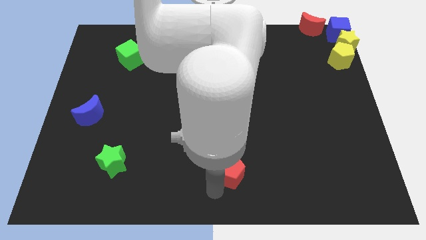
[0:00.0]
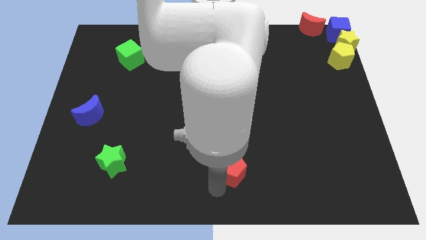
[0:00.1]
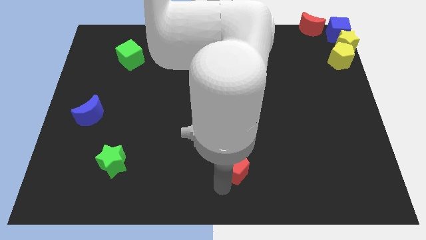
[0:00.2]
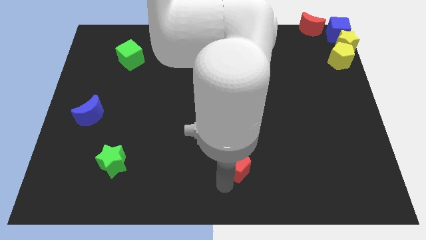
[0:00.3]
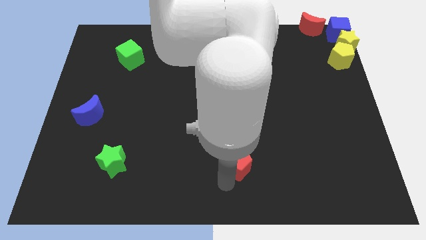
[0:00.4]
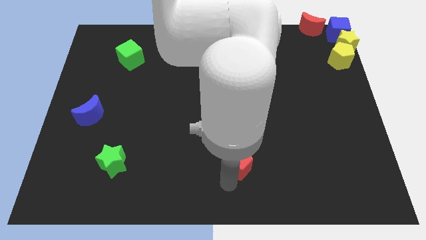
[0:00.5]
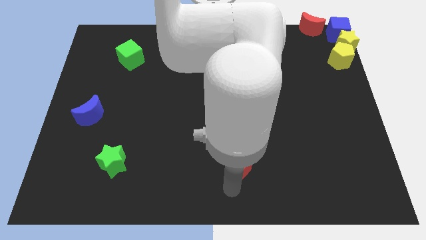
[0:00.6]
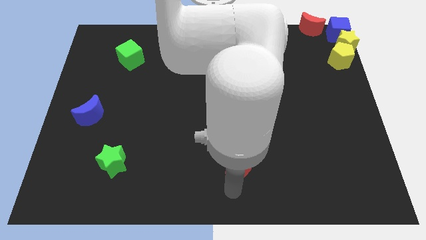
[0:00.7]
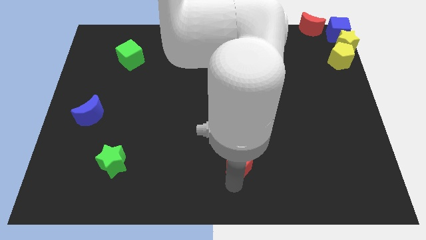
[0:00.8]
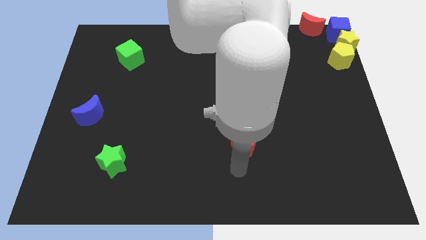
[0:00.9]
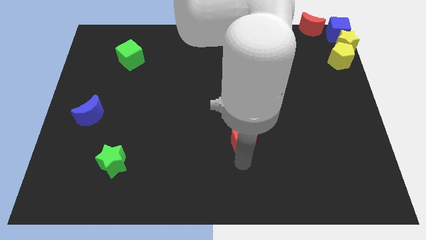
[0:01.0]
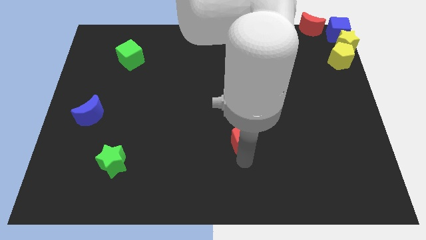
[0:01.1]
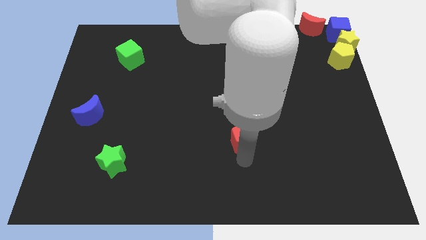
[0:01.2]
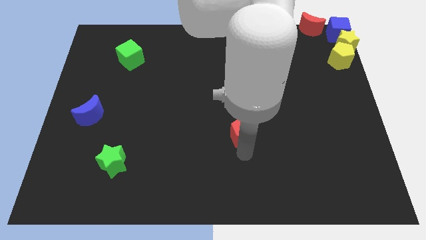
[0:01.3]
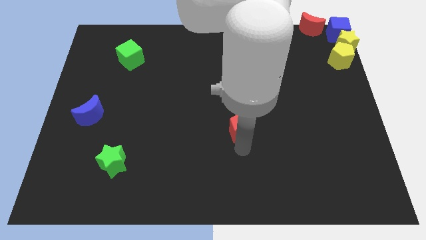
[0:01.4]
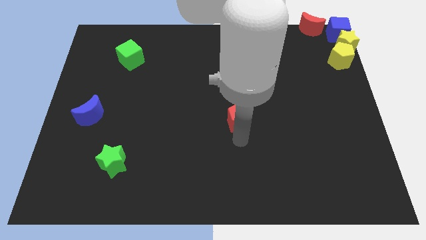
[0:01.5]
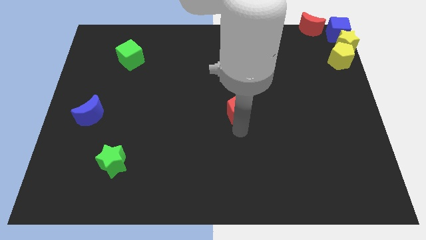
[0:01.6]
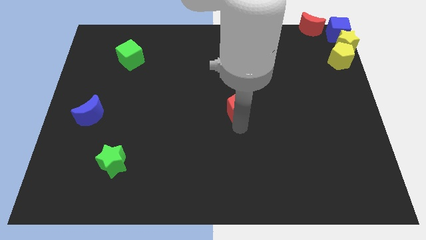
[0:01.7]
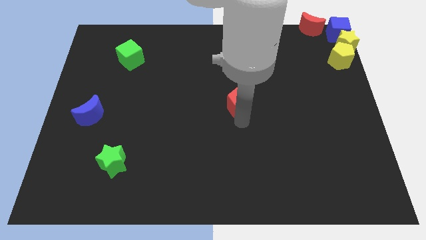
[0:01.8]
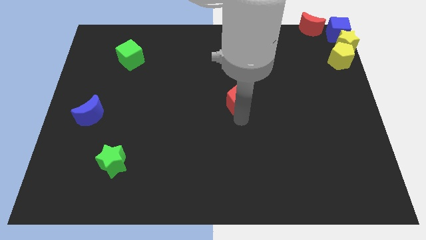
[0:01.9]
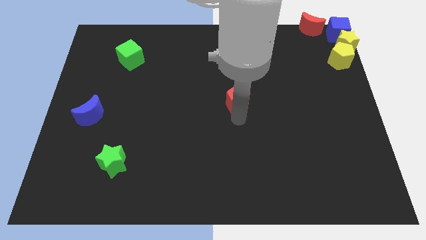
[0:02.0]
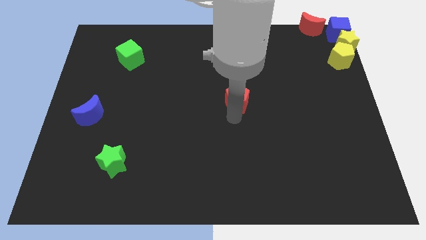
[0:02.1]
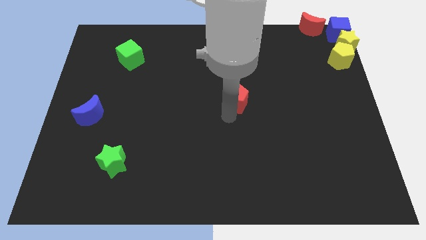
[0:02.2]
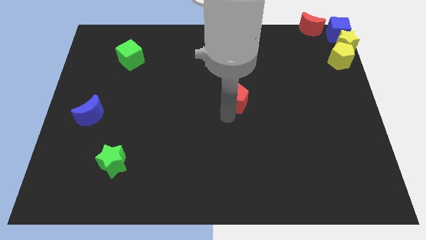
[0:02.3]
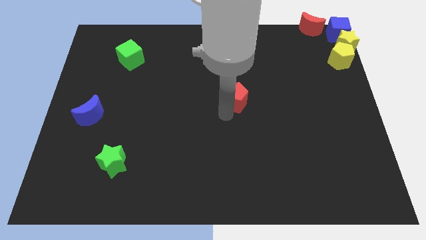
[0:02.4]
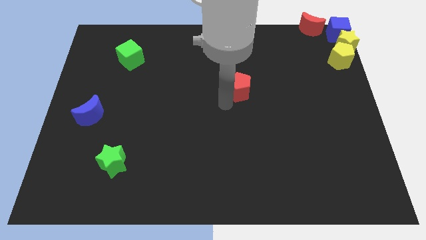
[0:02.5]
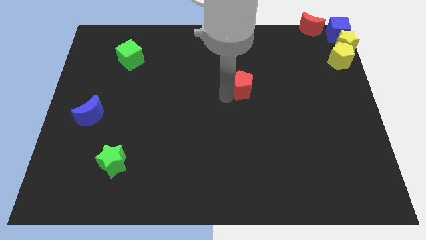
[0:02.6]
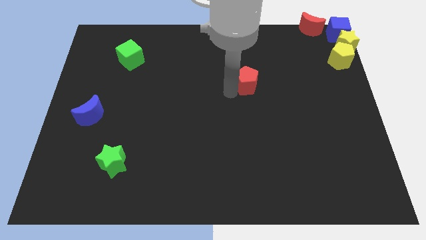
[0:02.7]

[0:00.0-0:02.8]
push the red pentagon to the top side

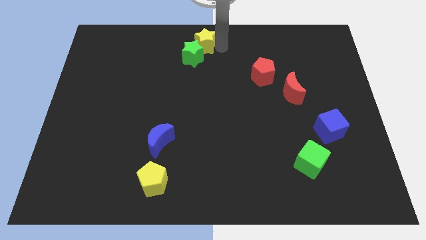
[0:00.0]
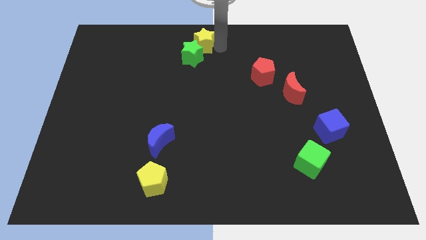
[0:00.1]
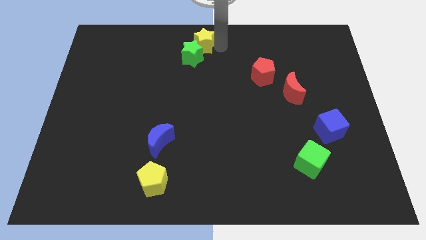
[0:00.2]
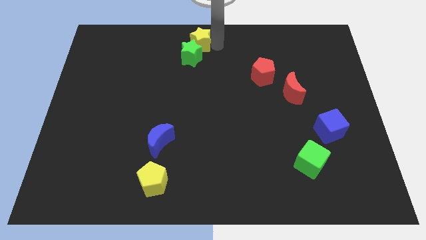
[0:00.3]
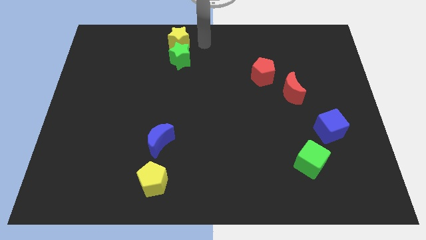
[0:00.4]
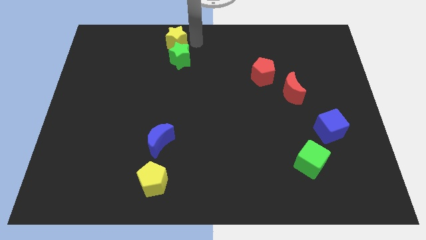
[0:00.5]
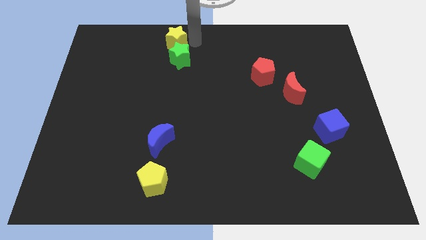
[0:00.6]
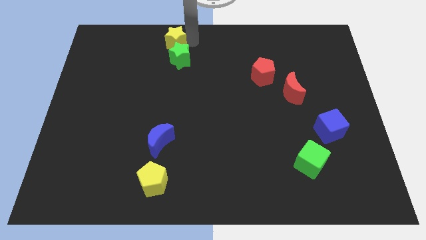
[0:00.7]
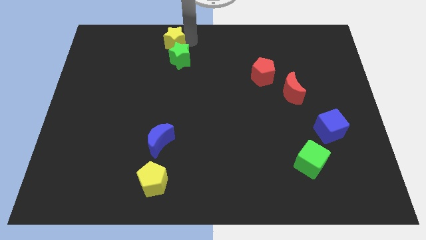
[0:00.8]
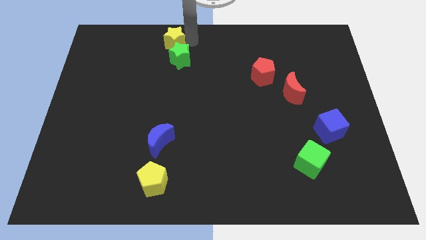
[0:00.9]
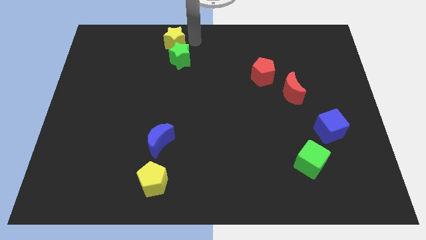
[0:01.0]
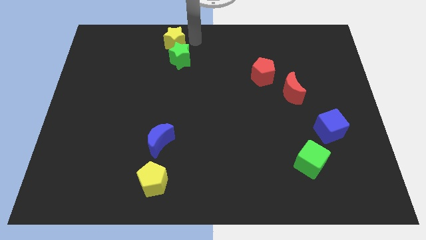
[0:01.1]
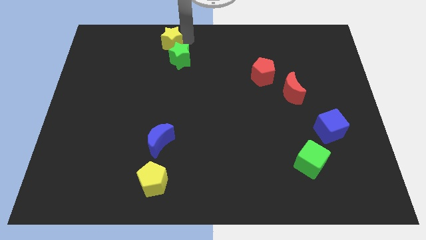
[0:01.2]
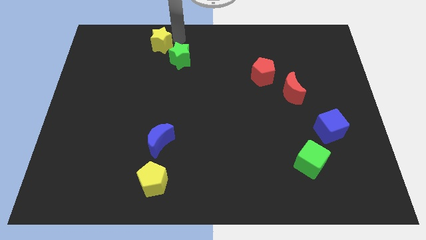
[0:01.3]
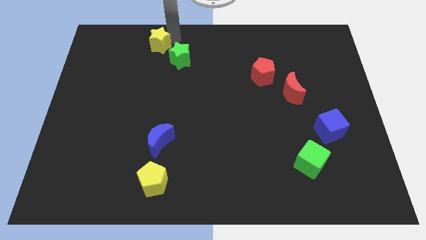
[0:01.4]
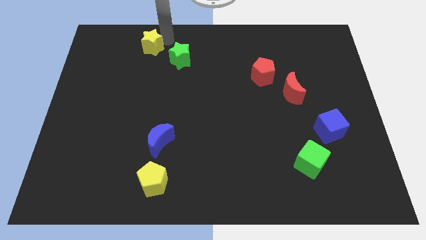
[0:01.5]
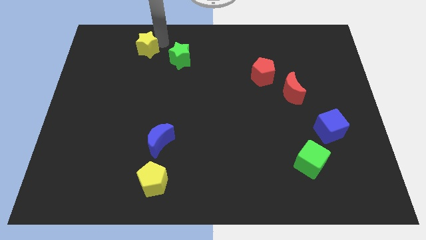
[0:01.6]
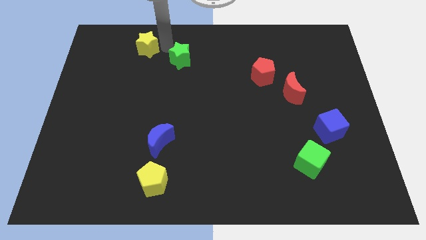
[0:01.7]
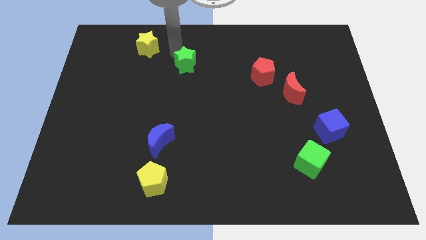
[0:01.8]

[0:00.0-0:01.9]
separate the yellow star from green star

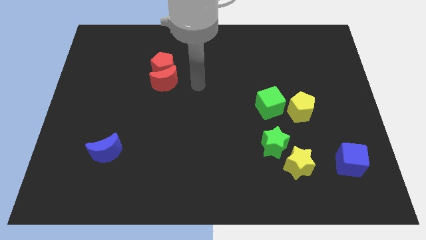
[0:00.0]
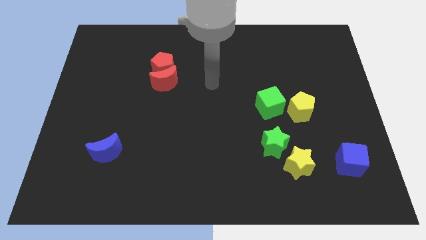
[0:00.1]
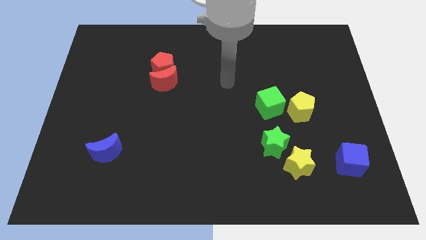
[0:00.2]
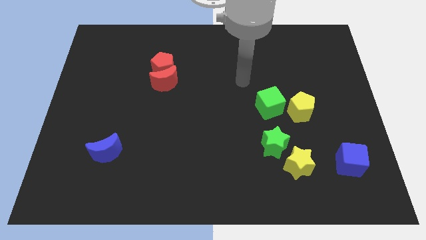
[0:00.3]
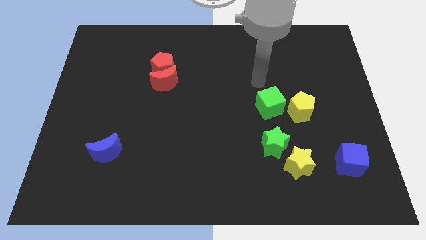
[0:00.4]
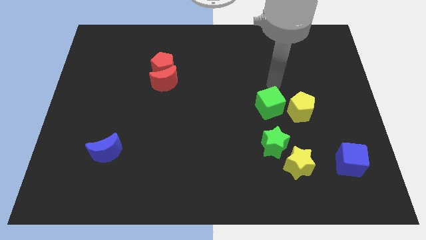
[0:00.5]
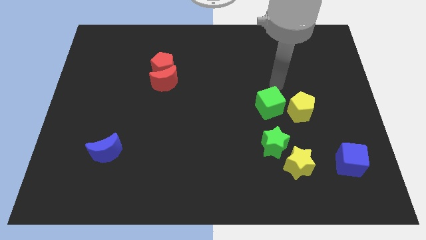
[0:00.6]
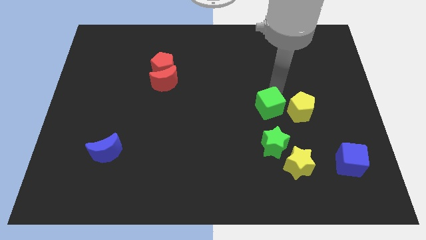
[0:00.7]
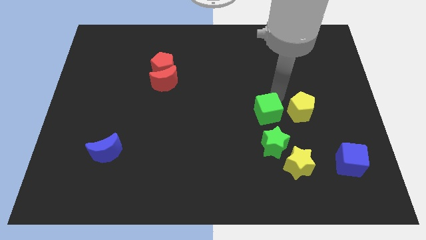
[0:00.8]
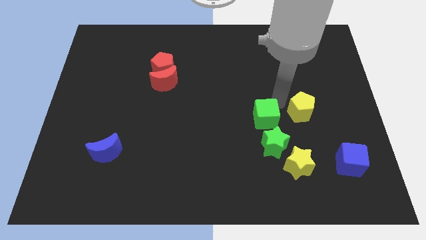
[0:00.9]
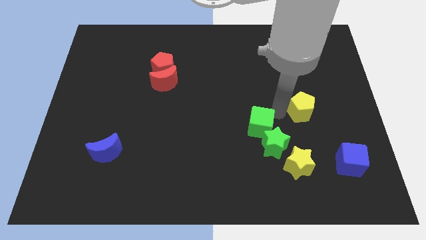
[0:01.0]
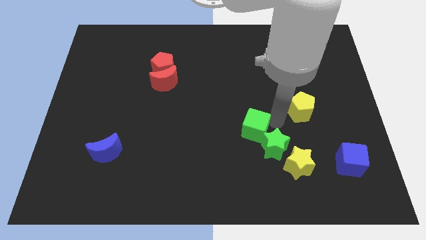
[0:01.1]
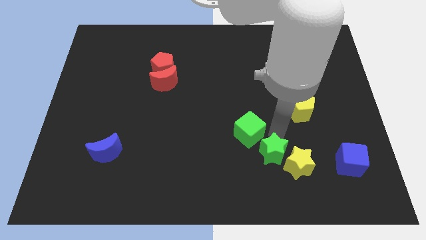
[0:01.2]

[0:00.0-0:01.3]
push the green cube to the top left of the green star

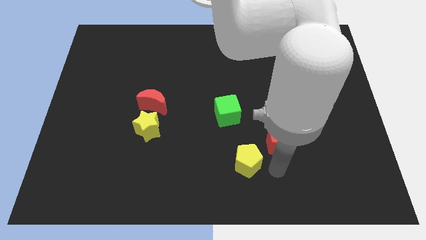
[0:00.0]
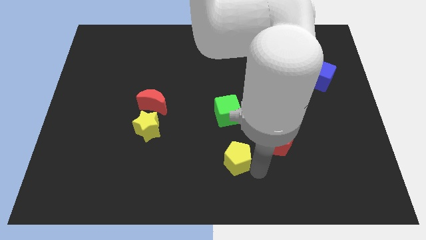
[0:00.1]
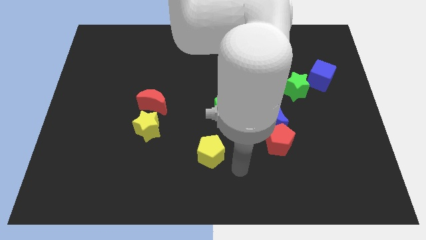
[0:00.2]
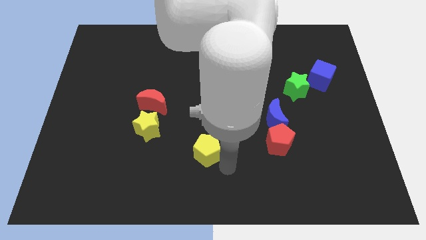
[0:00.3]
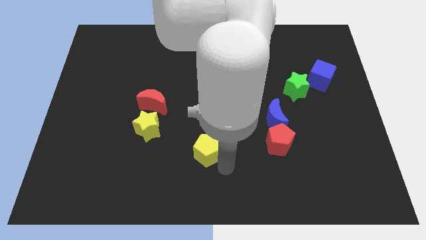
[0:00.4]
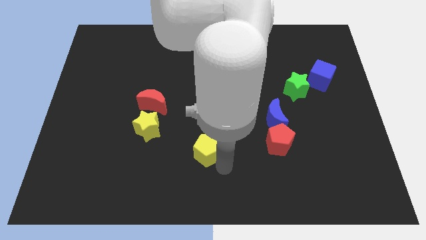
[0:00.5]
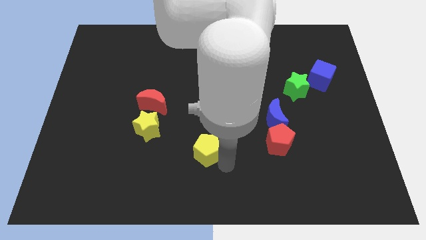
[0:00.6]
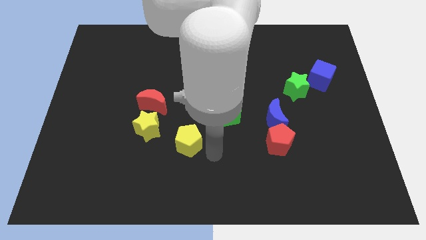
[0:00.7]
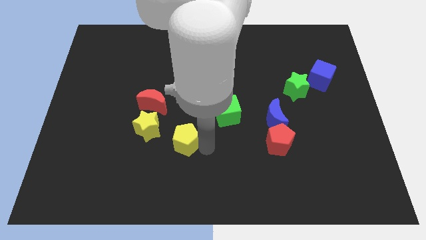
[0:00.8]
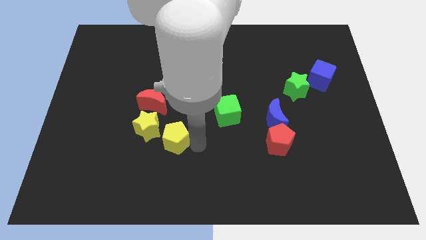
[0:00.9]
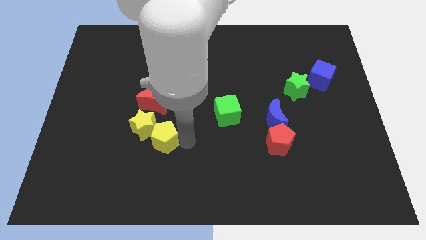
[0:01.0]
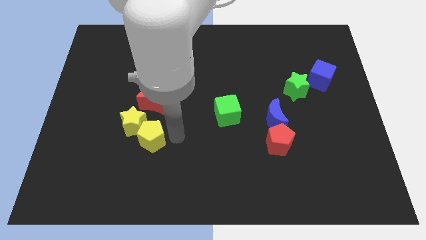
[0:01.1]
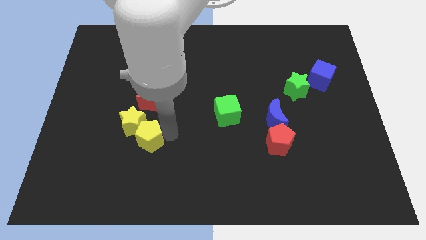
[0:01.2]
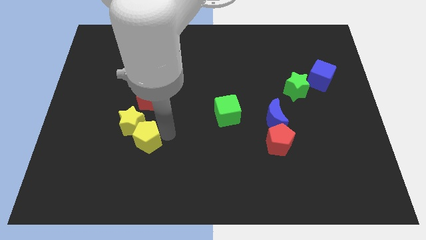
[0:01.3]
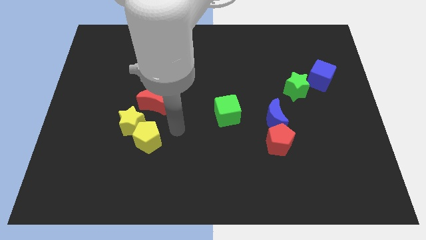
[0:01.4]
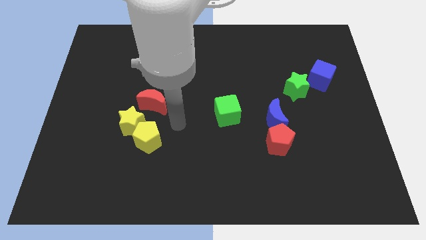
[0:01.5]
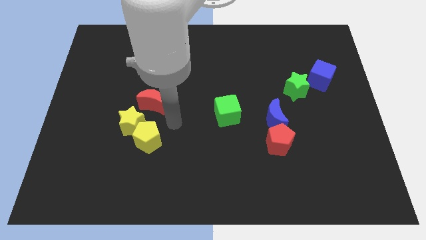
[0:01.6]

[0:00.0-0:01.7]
push the yellow pentagon into the yellow star

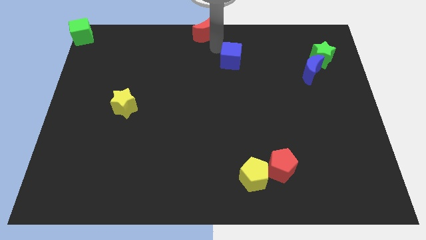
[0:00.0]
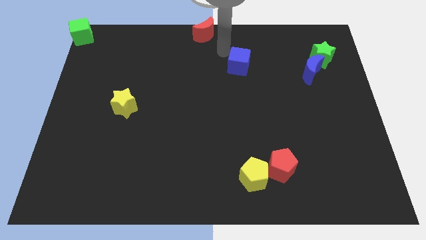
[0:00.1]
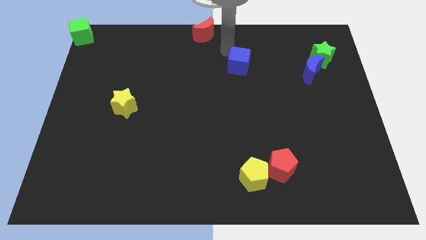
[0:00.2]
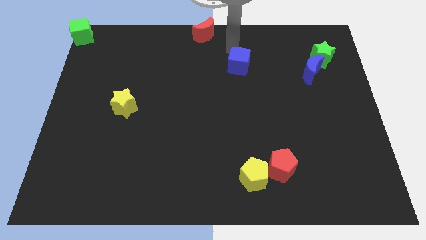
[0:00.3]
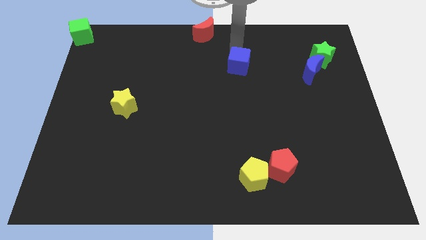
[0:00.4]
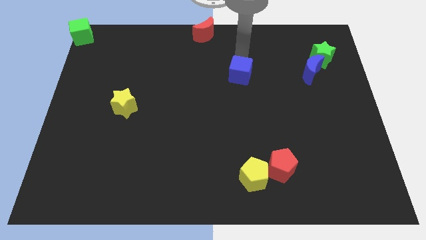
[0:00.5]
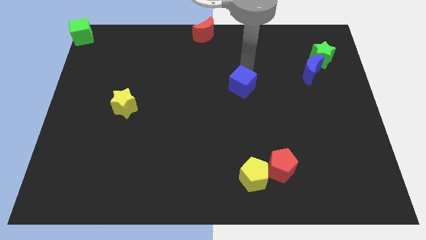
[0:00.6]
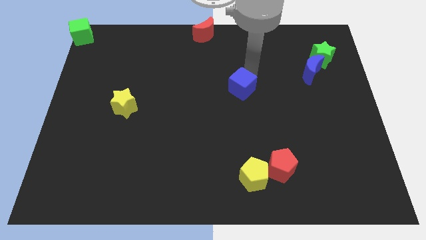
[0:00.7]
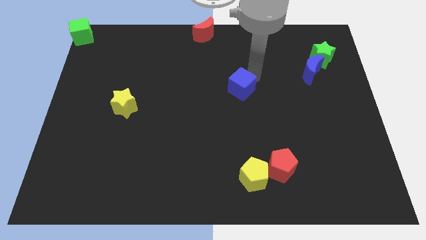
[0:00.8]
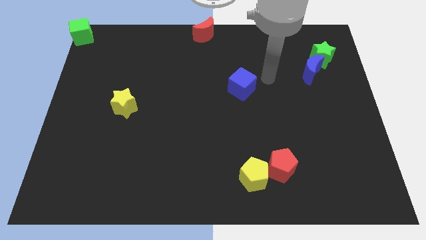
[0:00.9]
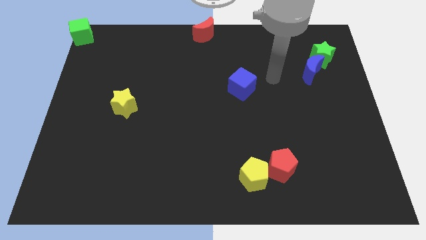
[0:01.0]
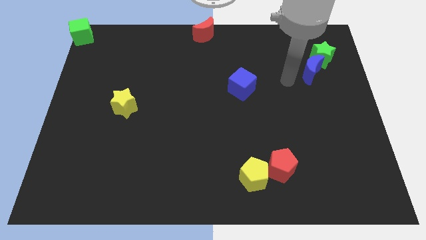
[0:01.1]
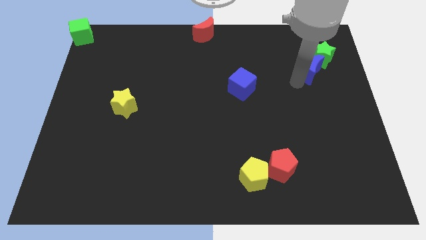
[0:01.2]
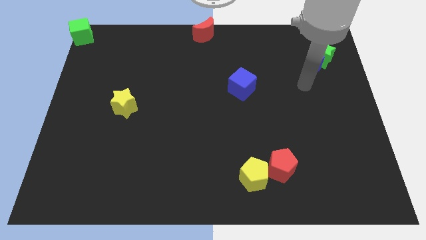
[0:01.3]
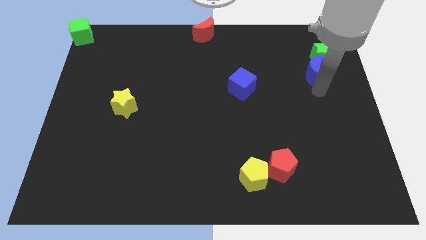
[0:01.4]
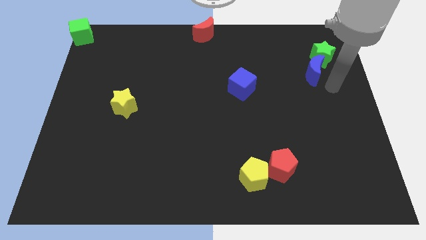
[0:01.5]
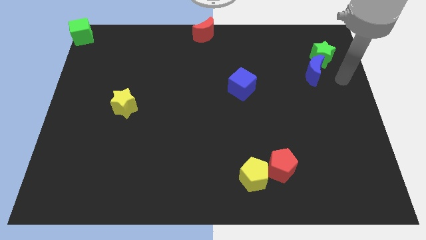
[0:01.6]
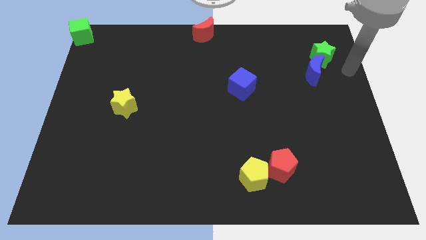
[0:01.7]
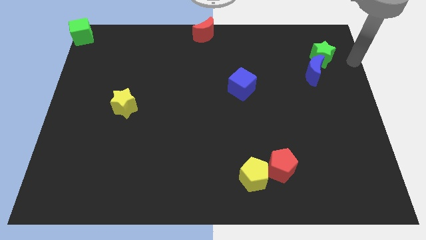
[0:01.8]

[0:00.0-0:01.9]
push the blue cube down slightly
